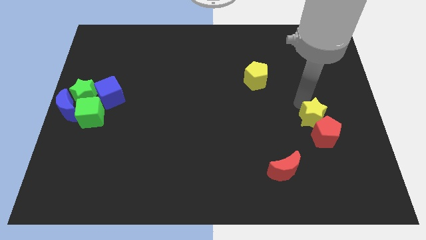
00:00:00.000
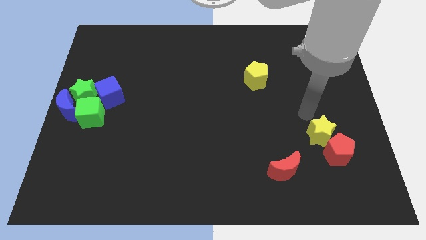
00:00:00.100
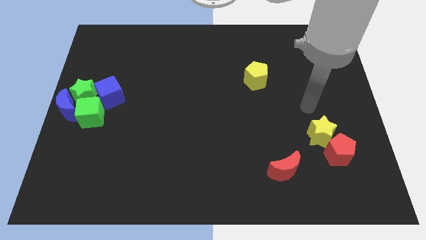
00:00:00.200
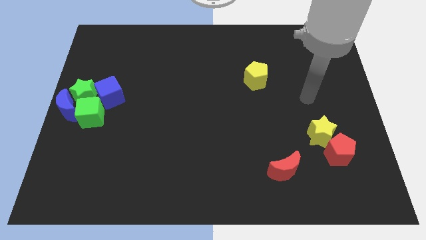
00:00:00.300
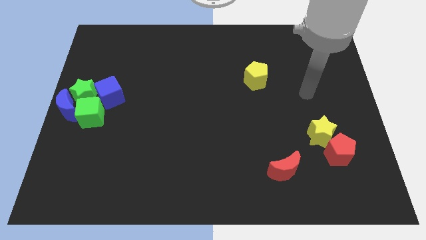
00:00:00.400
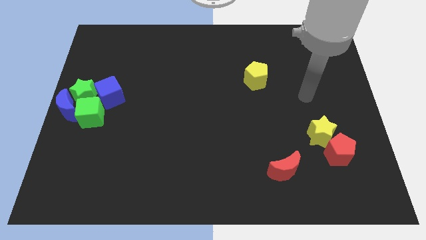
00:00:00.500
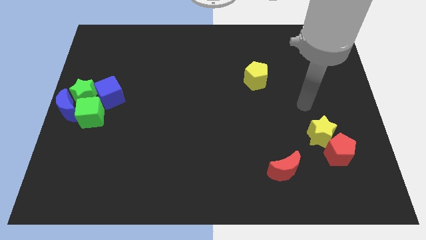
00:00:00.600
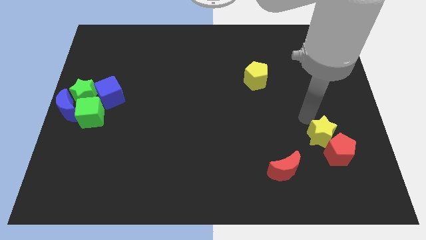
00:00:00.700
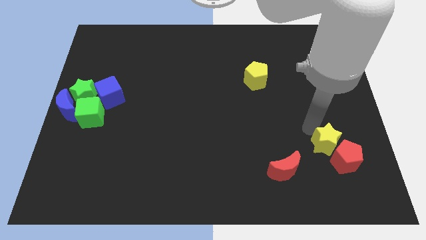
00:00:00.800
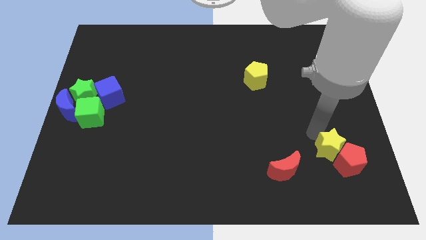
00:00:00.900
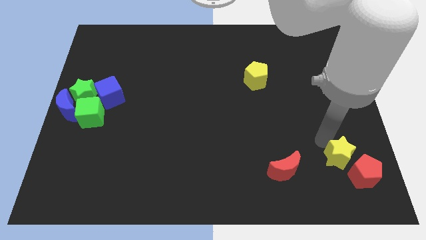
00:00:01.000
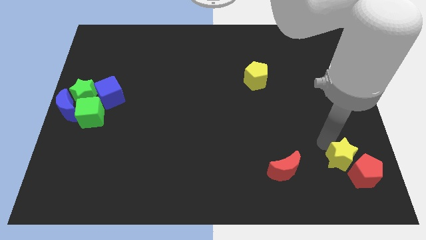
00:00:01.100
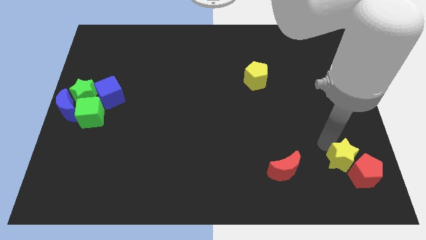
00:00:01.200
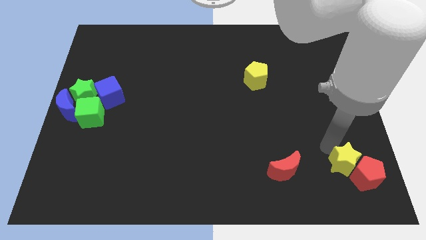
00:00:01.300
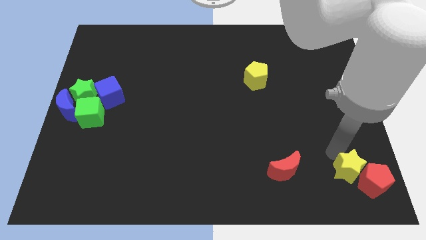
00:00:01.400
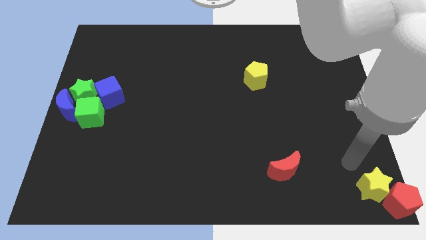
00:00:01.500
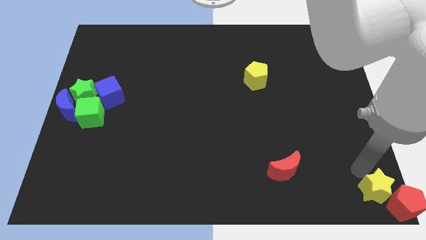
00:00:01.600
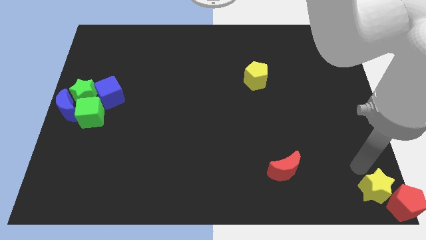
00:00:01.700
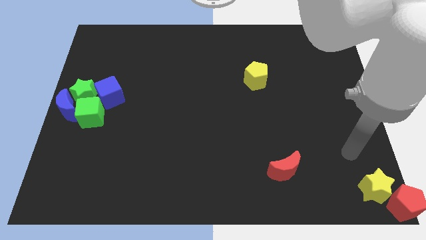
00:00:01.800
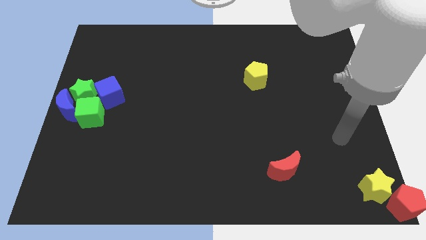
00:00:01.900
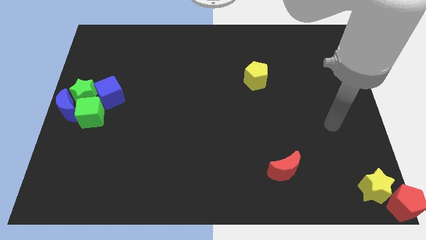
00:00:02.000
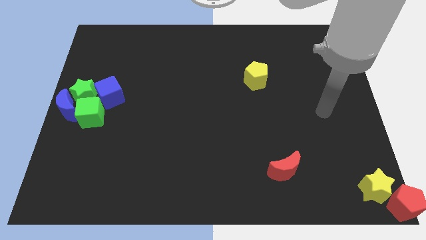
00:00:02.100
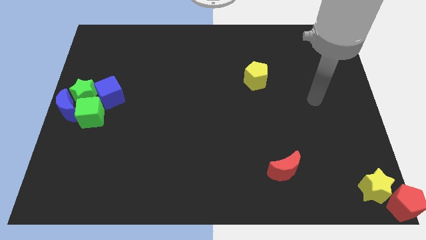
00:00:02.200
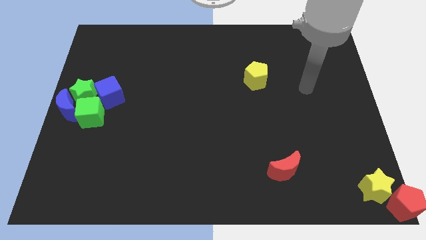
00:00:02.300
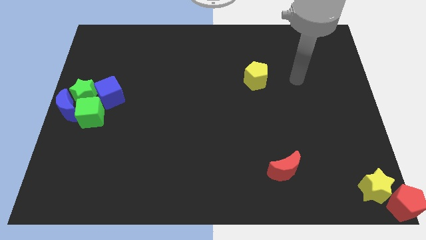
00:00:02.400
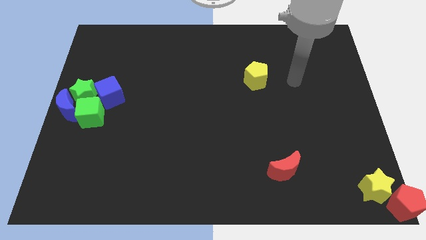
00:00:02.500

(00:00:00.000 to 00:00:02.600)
push the yellow star along with the red pentagon to the bottom right of the board

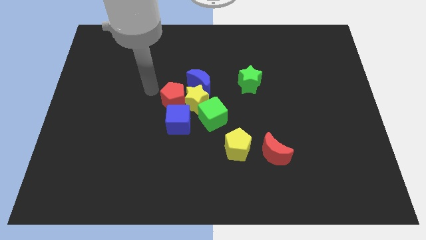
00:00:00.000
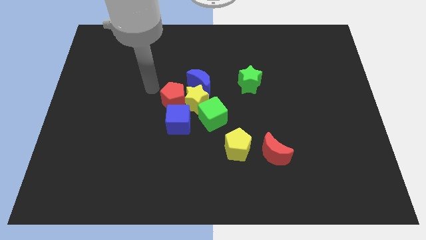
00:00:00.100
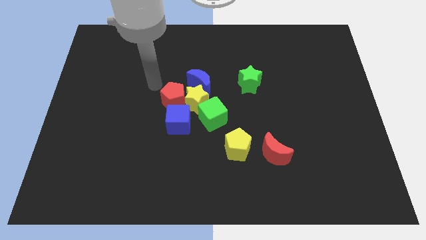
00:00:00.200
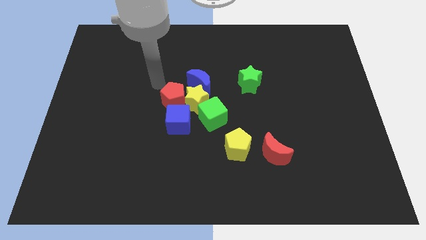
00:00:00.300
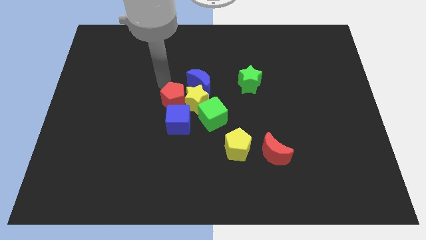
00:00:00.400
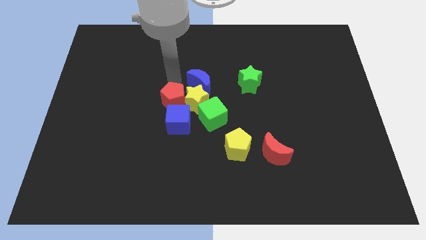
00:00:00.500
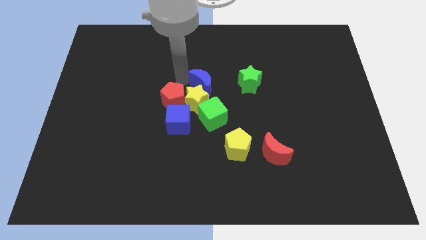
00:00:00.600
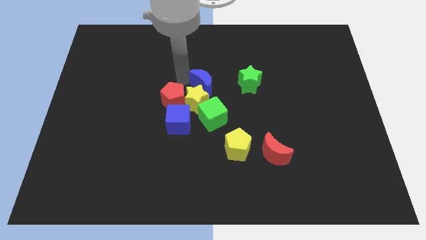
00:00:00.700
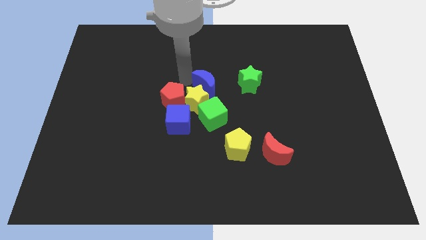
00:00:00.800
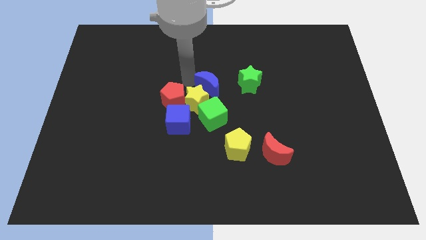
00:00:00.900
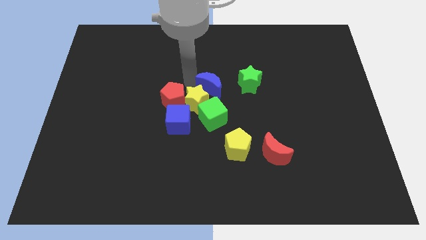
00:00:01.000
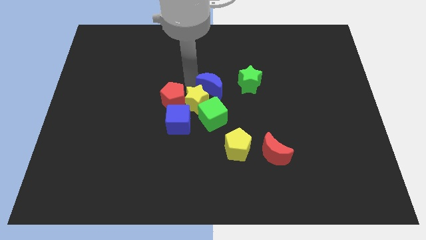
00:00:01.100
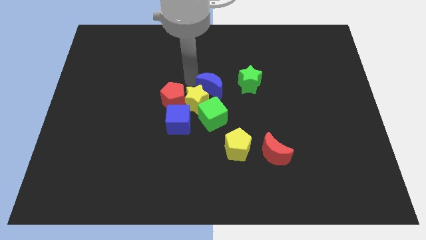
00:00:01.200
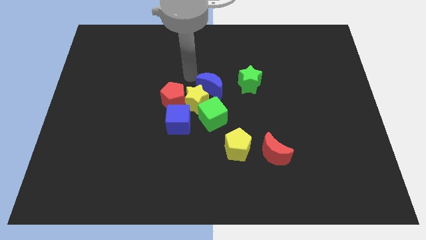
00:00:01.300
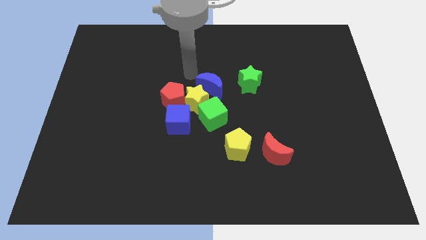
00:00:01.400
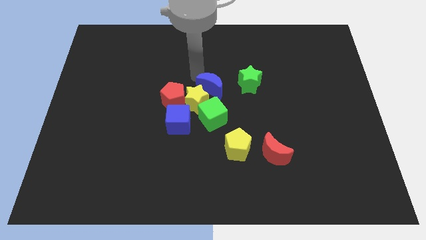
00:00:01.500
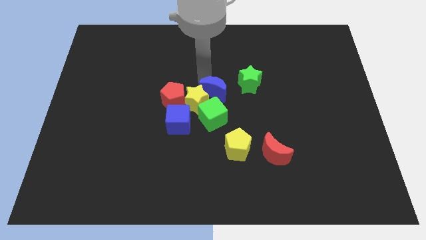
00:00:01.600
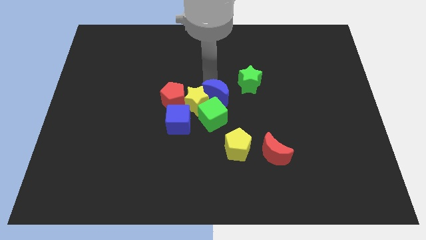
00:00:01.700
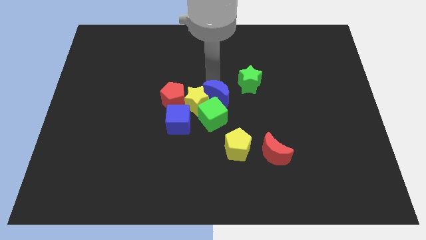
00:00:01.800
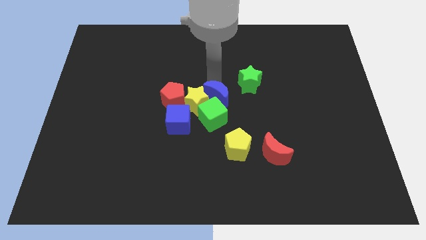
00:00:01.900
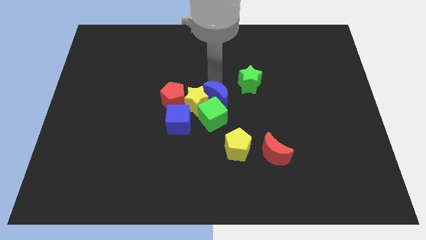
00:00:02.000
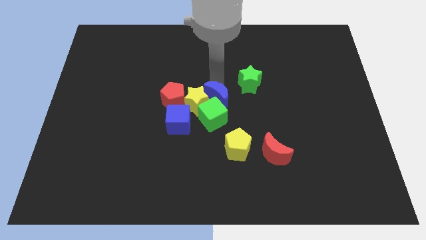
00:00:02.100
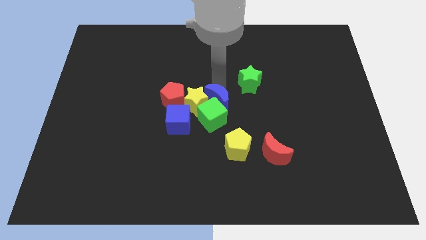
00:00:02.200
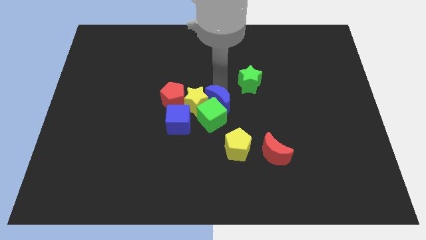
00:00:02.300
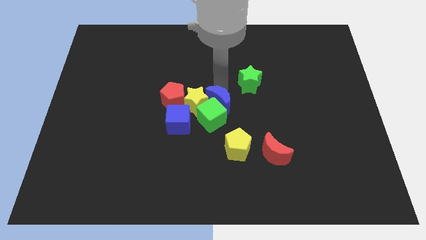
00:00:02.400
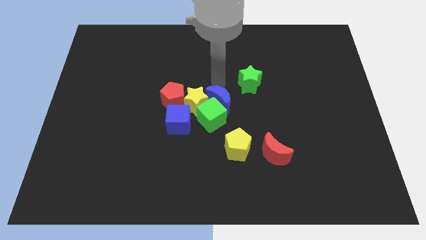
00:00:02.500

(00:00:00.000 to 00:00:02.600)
move the blue crescent into the green cube and yellow star

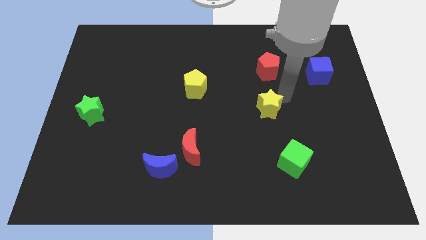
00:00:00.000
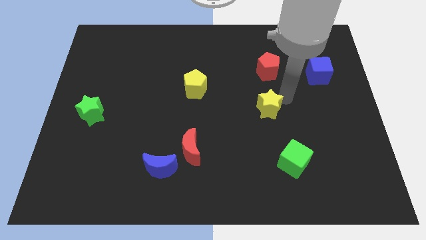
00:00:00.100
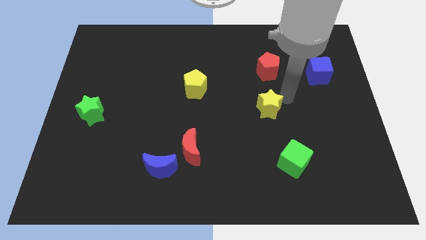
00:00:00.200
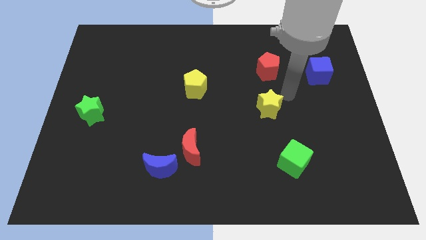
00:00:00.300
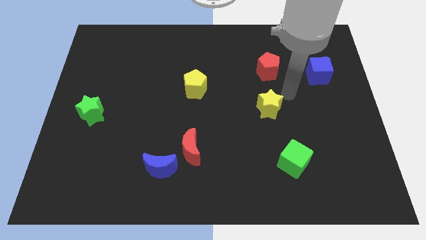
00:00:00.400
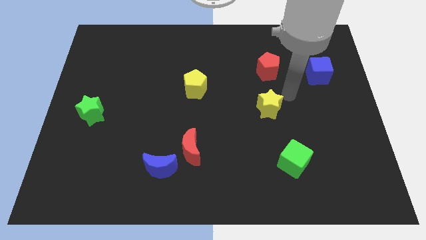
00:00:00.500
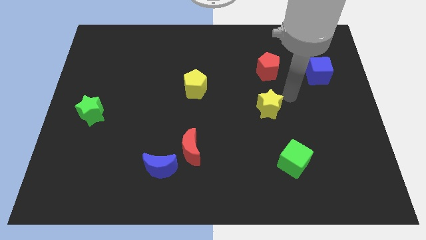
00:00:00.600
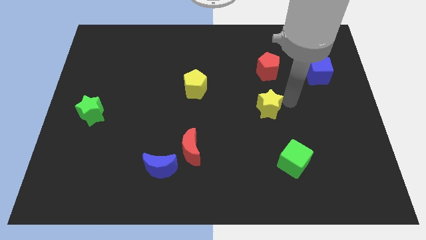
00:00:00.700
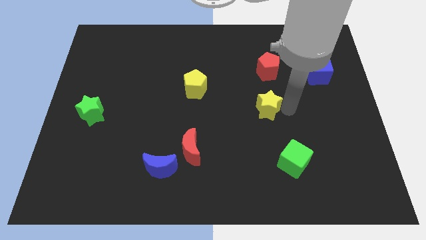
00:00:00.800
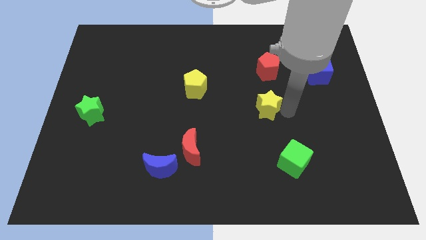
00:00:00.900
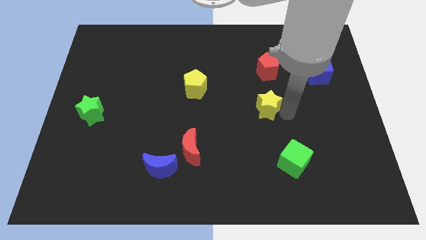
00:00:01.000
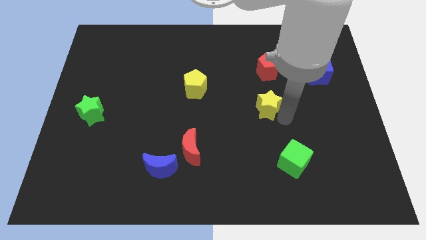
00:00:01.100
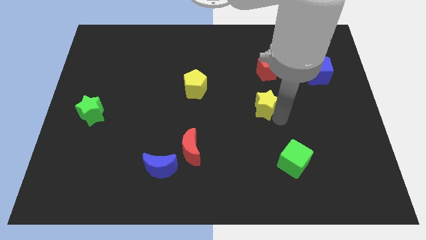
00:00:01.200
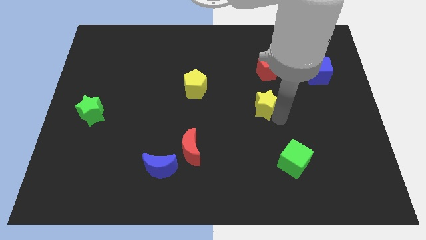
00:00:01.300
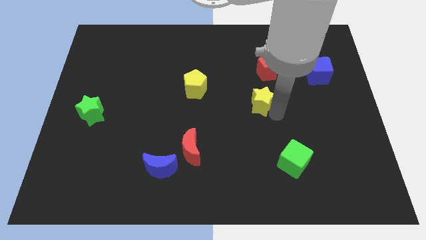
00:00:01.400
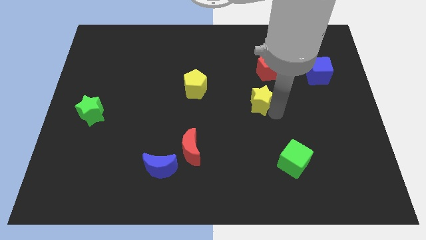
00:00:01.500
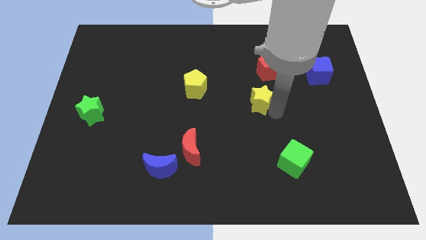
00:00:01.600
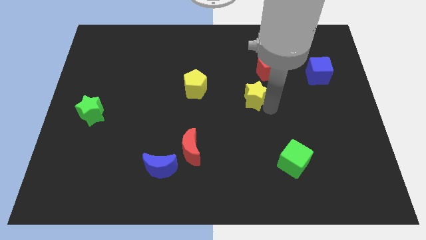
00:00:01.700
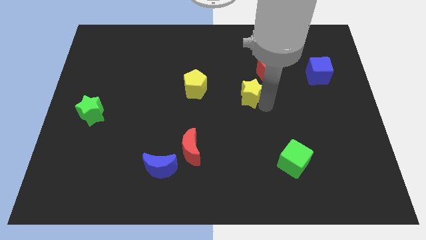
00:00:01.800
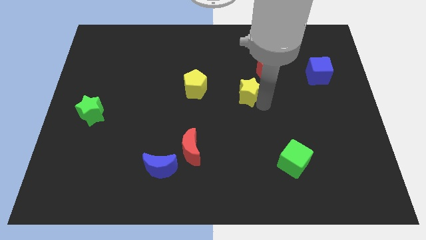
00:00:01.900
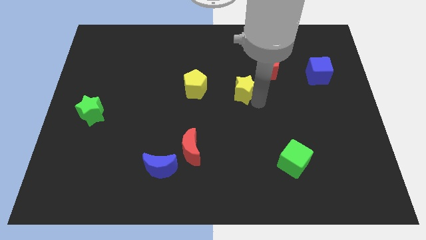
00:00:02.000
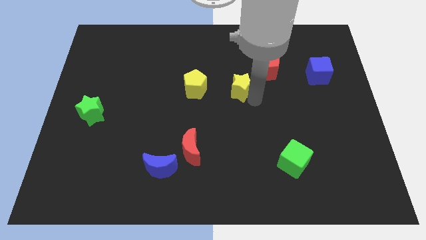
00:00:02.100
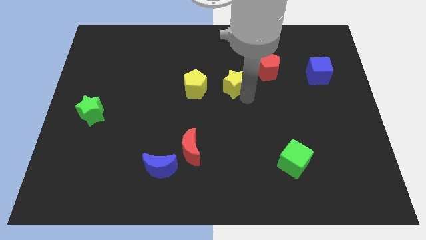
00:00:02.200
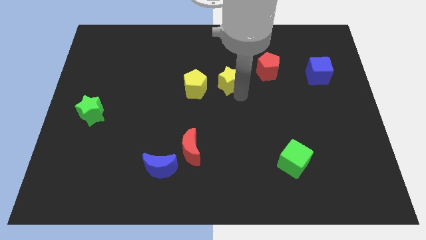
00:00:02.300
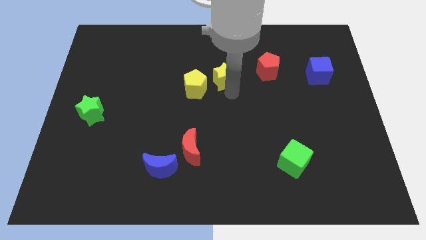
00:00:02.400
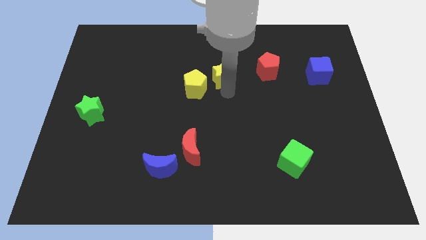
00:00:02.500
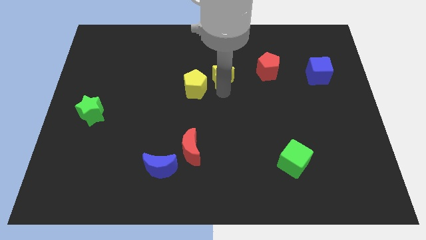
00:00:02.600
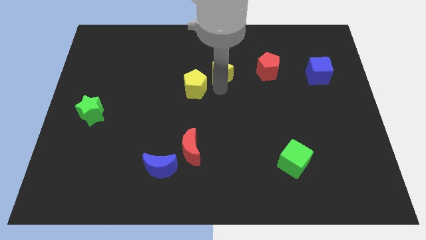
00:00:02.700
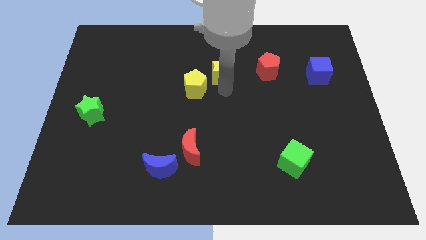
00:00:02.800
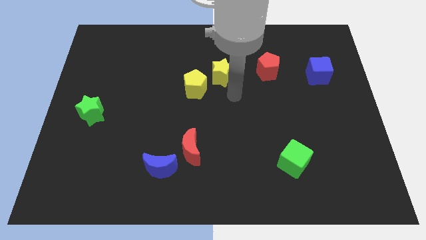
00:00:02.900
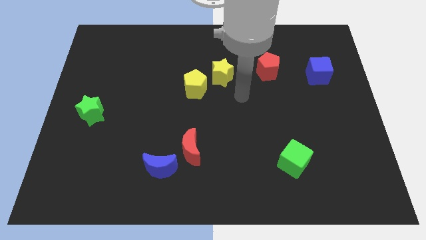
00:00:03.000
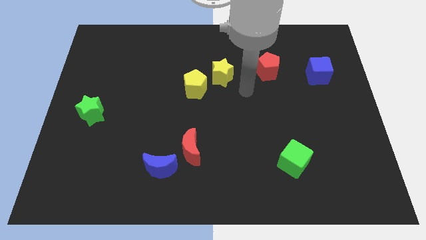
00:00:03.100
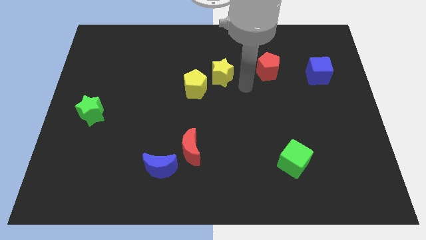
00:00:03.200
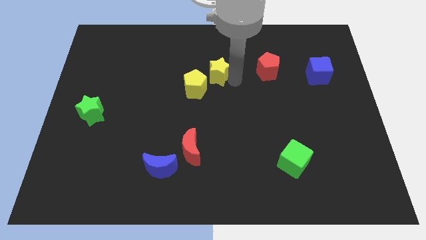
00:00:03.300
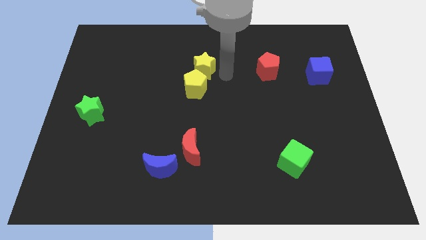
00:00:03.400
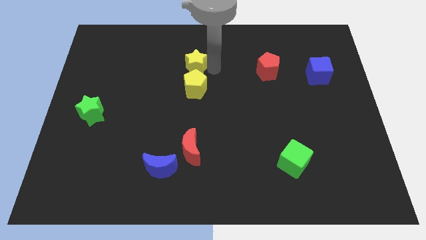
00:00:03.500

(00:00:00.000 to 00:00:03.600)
place the yellow star above the yellow pentagon

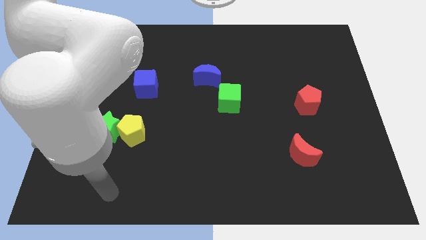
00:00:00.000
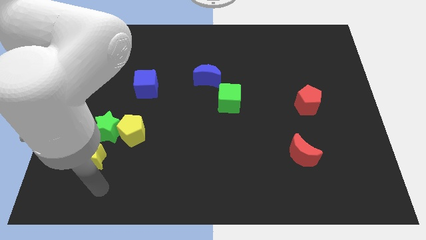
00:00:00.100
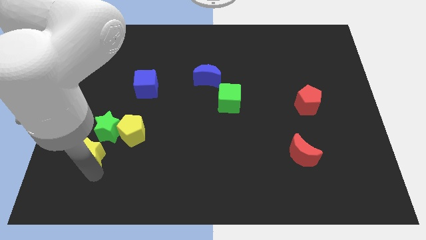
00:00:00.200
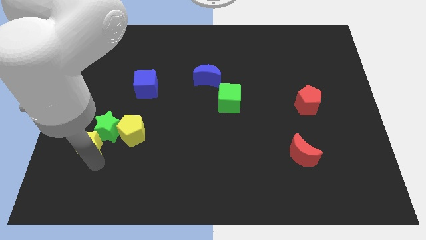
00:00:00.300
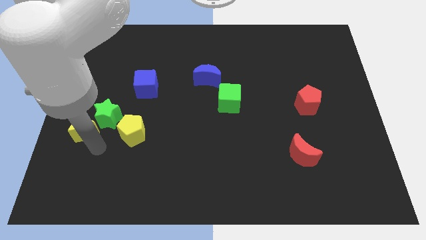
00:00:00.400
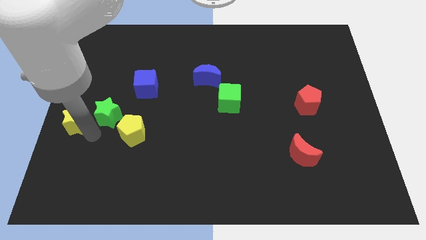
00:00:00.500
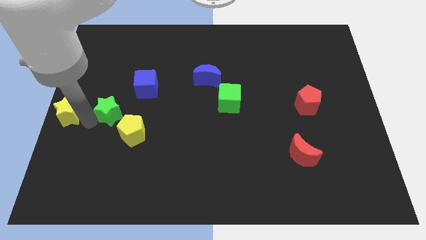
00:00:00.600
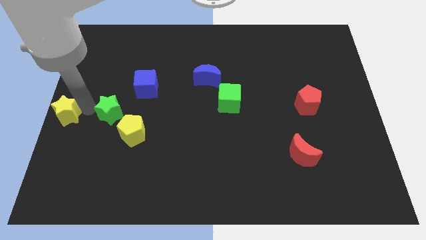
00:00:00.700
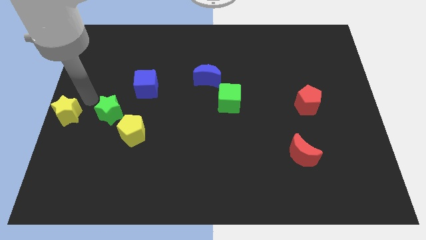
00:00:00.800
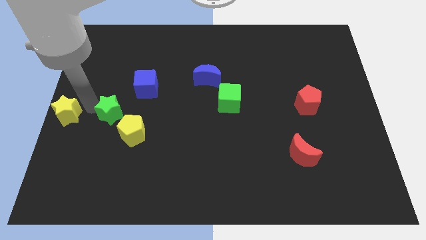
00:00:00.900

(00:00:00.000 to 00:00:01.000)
push the yellow star to the left of the green star
